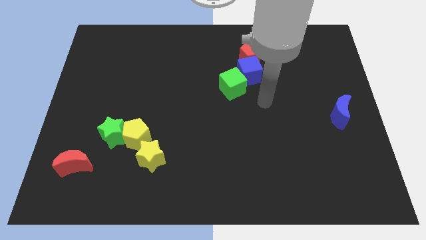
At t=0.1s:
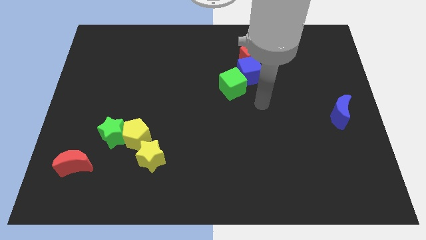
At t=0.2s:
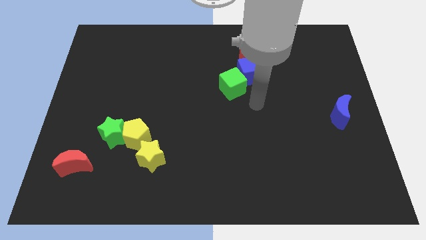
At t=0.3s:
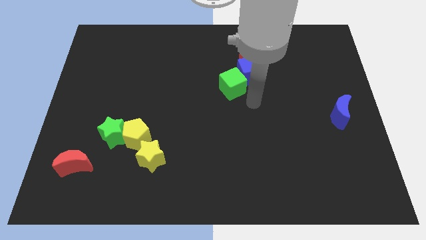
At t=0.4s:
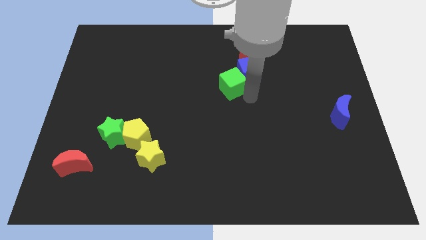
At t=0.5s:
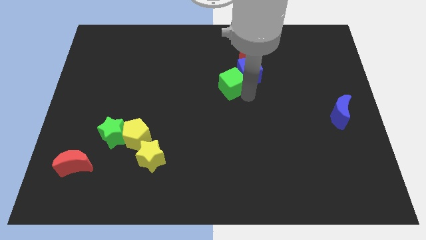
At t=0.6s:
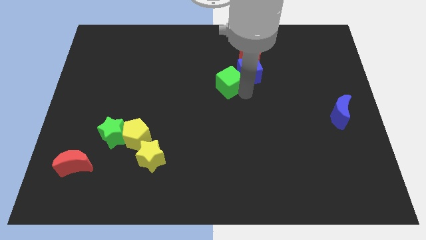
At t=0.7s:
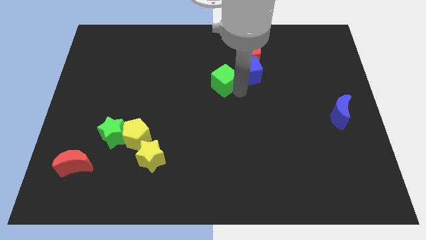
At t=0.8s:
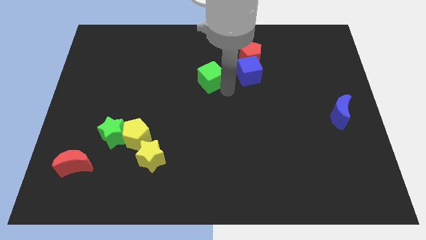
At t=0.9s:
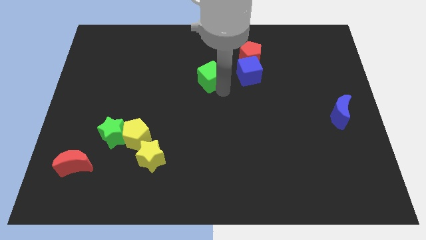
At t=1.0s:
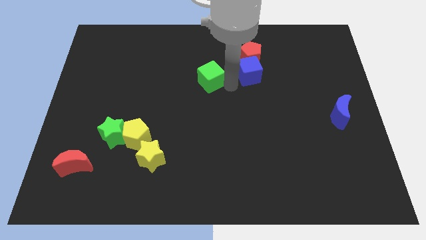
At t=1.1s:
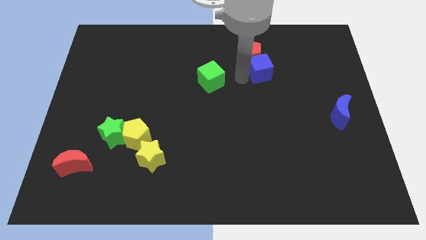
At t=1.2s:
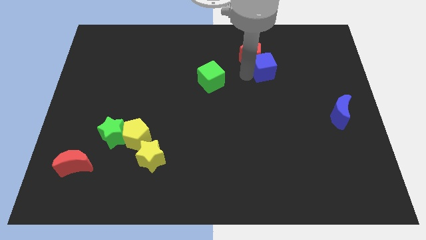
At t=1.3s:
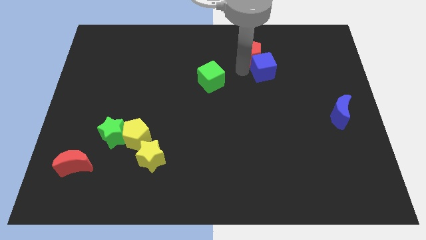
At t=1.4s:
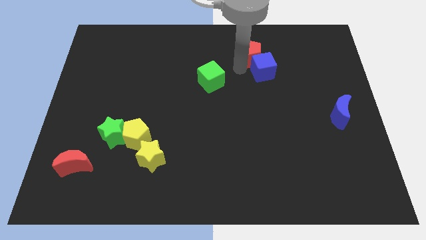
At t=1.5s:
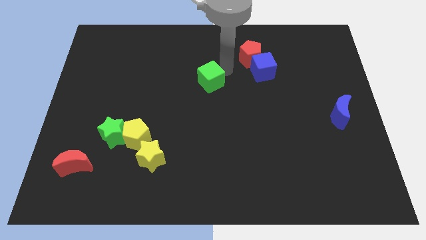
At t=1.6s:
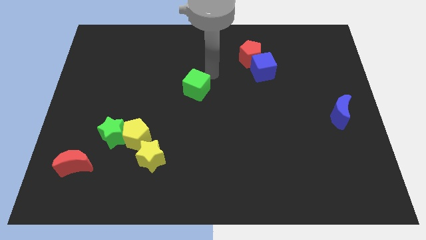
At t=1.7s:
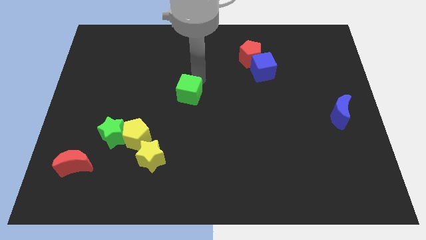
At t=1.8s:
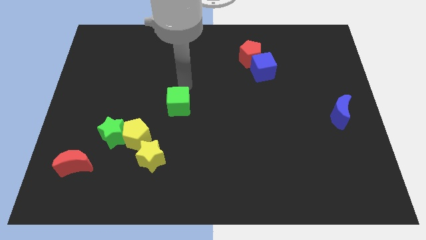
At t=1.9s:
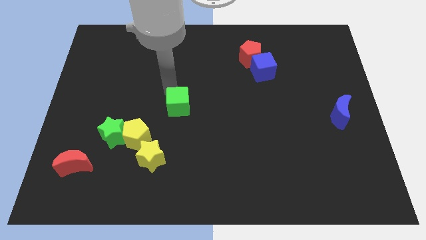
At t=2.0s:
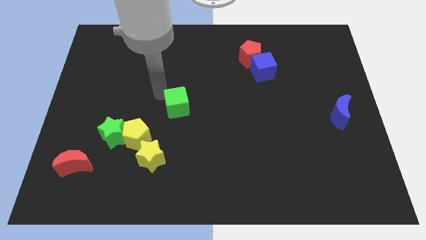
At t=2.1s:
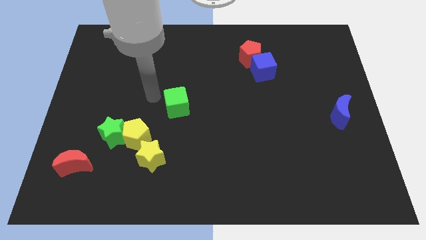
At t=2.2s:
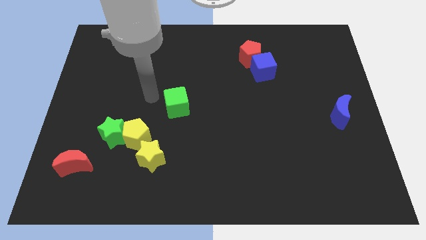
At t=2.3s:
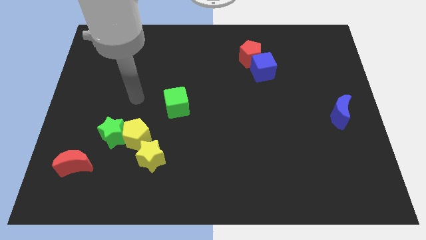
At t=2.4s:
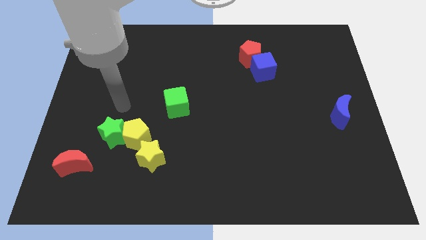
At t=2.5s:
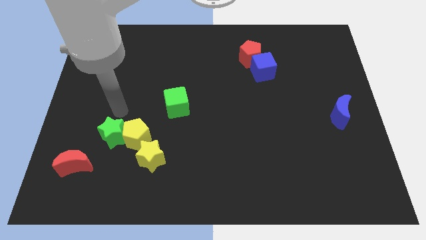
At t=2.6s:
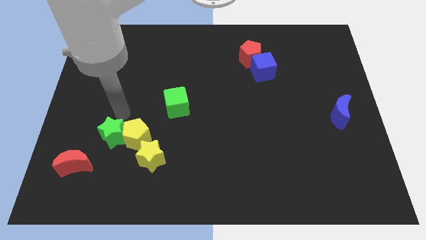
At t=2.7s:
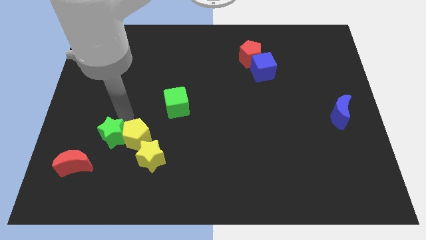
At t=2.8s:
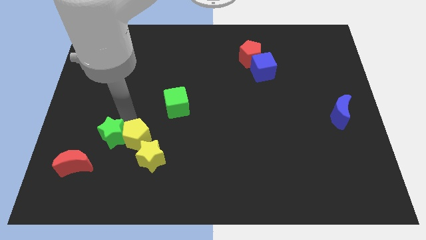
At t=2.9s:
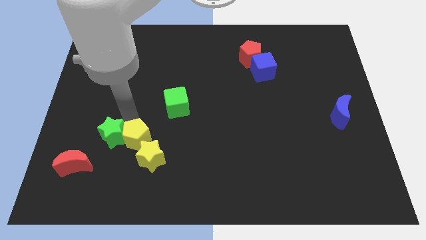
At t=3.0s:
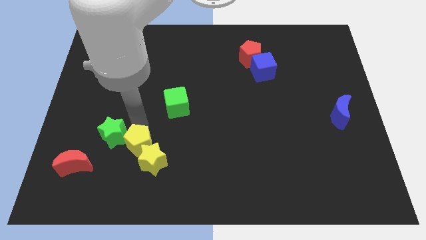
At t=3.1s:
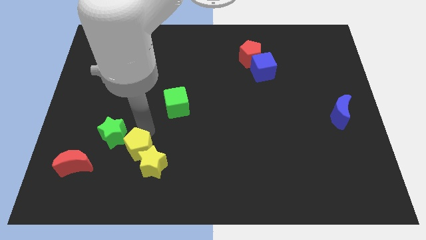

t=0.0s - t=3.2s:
move yellow blocks slightly down

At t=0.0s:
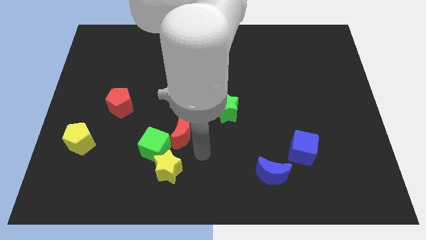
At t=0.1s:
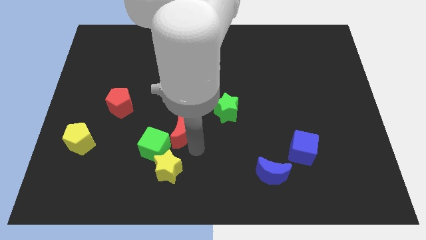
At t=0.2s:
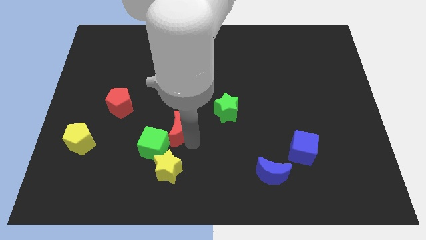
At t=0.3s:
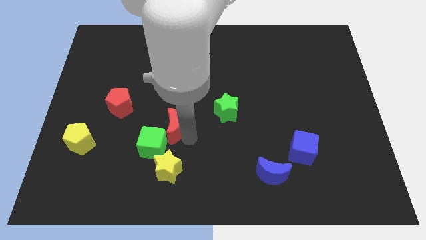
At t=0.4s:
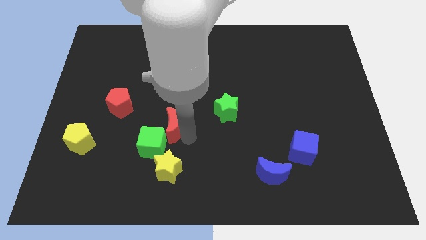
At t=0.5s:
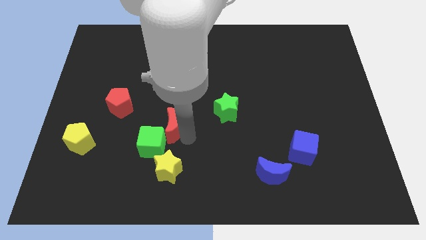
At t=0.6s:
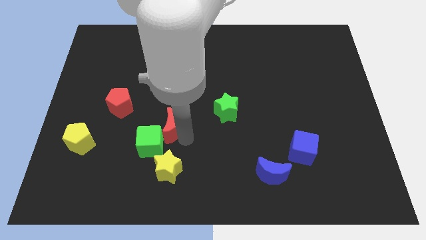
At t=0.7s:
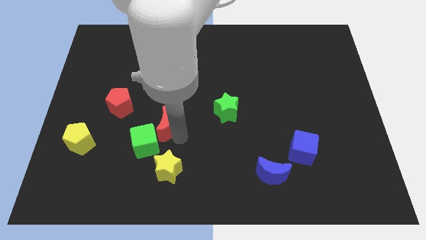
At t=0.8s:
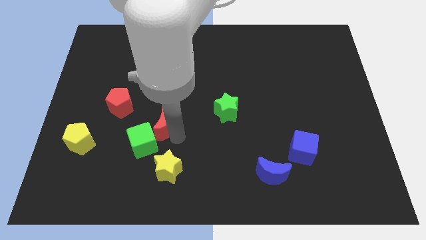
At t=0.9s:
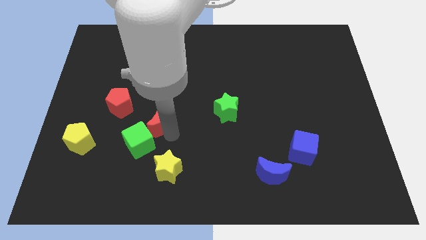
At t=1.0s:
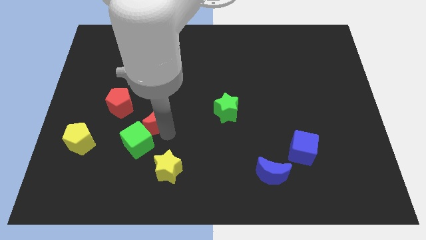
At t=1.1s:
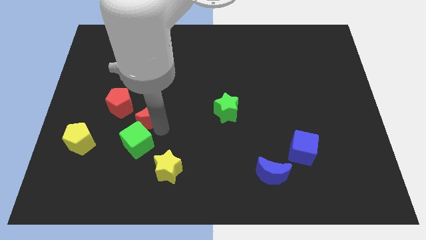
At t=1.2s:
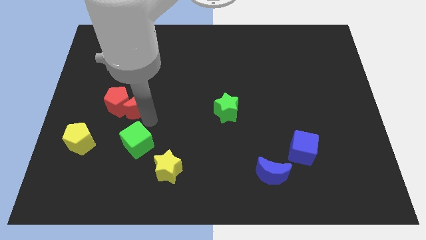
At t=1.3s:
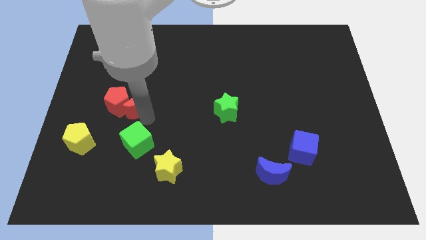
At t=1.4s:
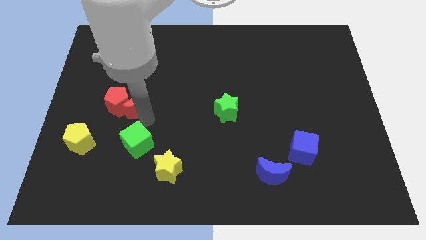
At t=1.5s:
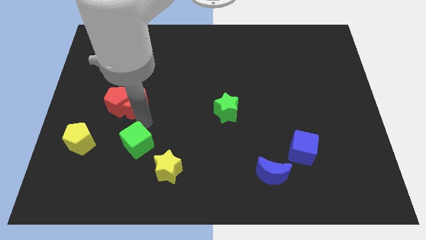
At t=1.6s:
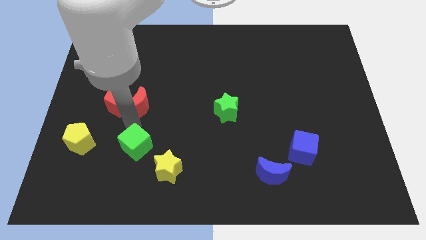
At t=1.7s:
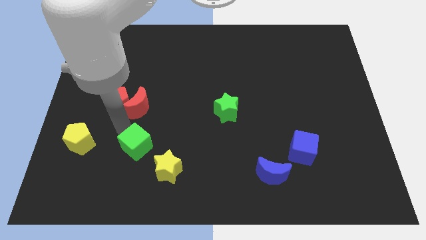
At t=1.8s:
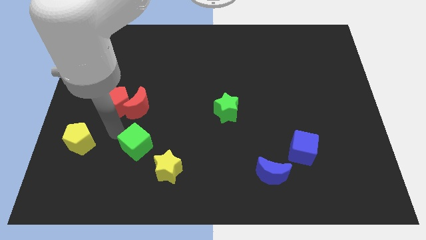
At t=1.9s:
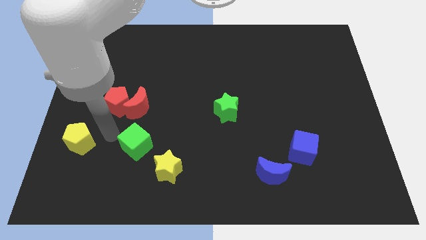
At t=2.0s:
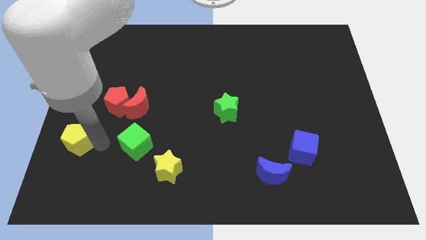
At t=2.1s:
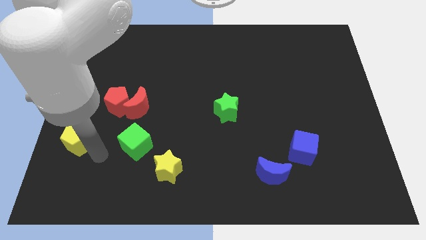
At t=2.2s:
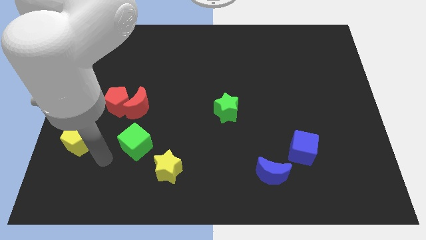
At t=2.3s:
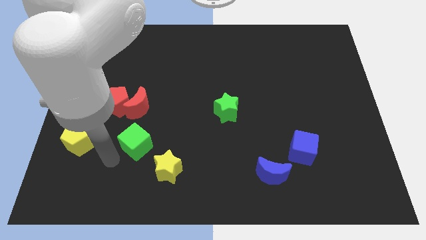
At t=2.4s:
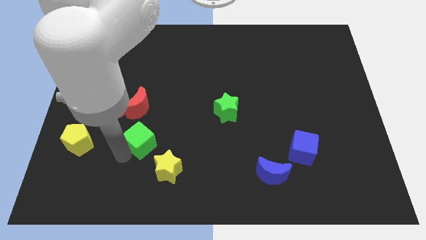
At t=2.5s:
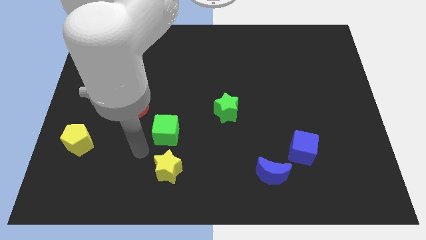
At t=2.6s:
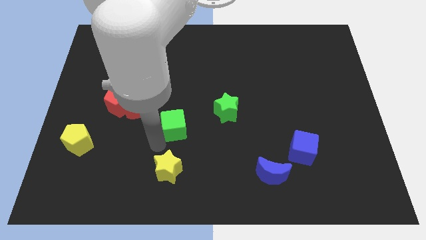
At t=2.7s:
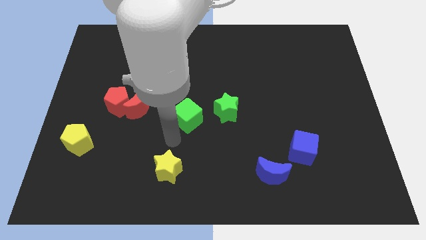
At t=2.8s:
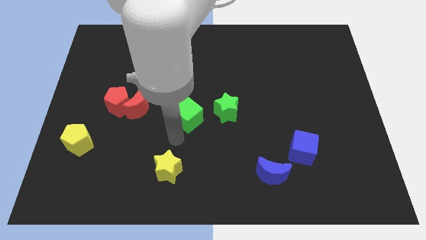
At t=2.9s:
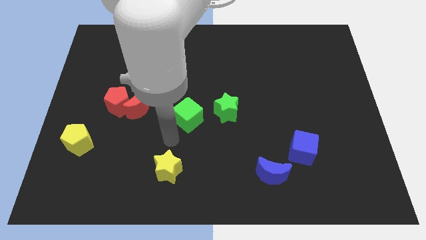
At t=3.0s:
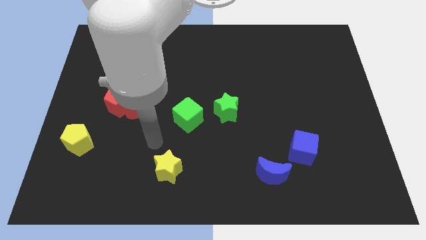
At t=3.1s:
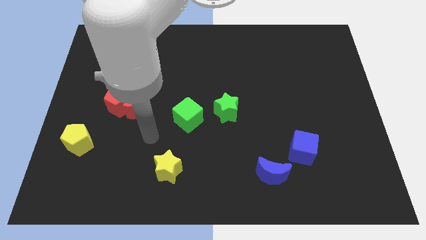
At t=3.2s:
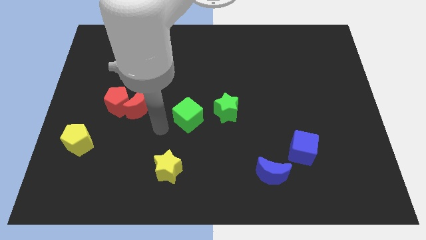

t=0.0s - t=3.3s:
push the green cube towards the center

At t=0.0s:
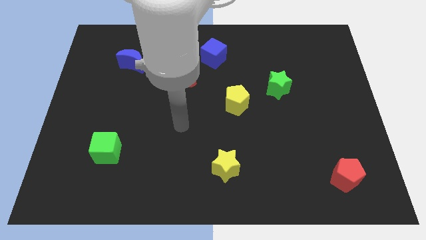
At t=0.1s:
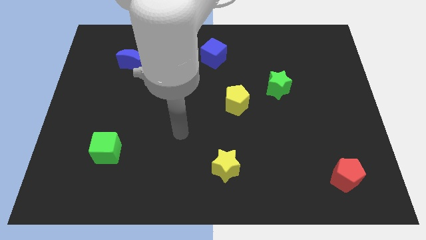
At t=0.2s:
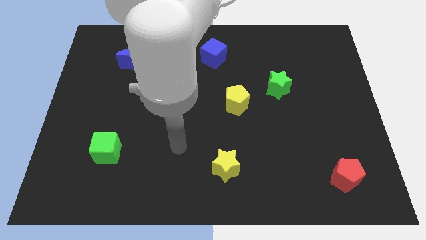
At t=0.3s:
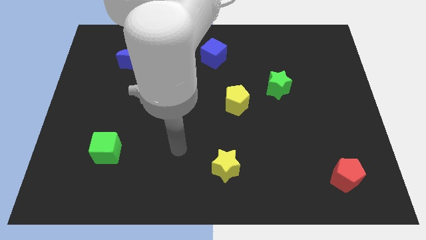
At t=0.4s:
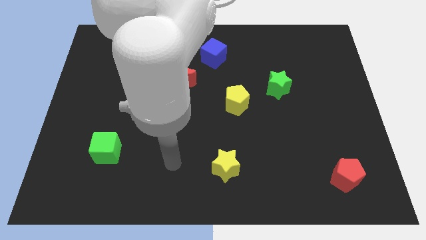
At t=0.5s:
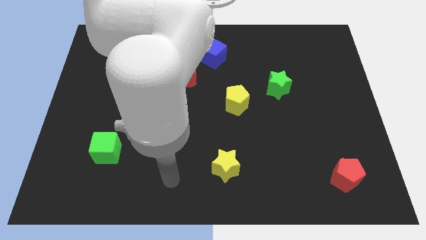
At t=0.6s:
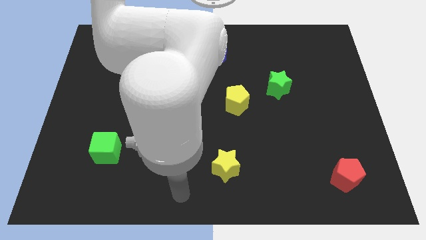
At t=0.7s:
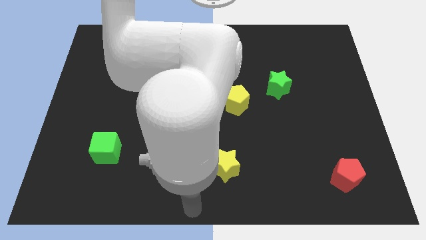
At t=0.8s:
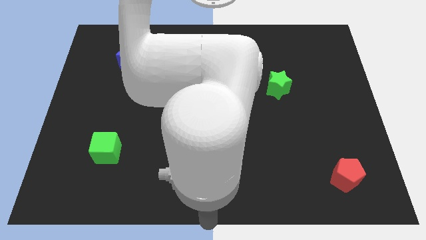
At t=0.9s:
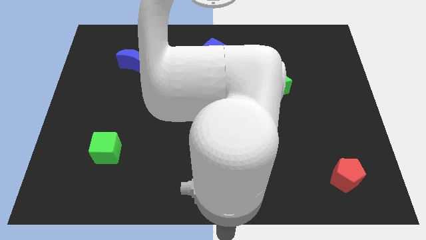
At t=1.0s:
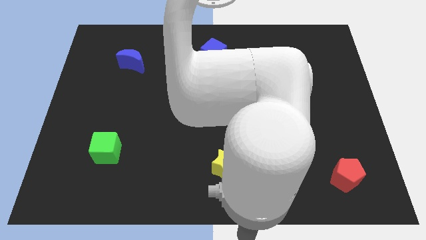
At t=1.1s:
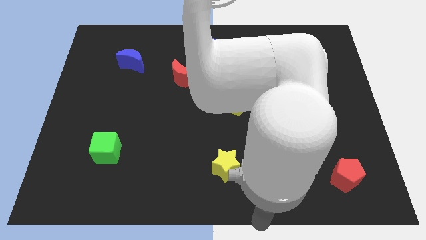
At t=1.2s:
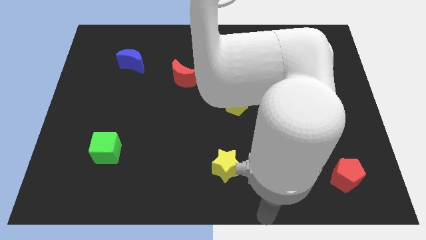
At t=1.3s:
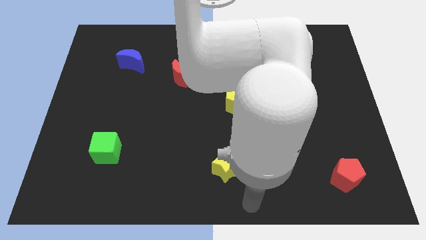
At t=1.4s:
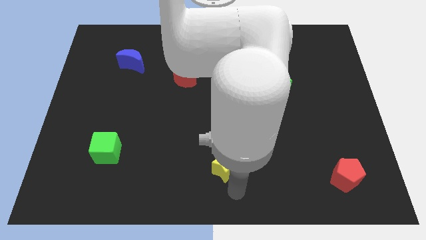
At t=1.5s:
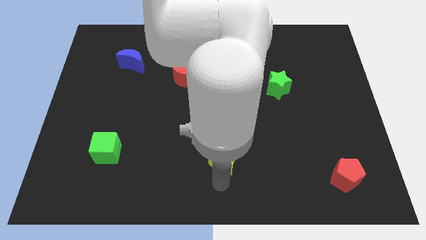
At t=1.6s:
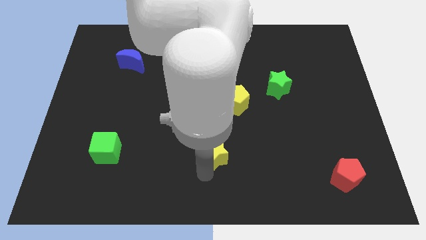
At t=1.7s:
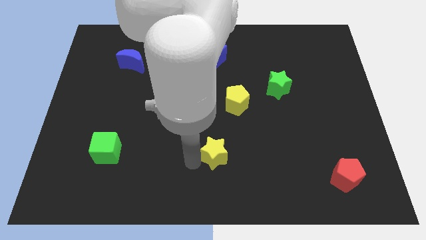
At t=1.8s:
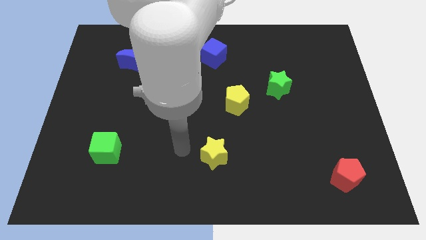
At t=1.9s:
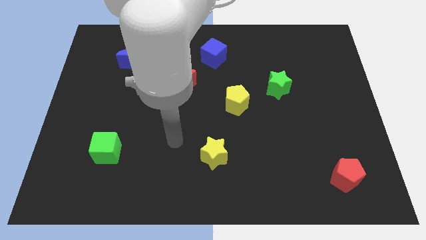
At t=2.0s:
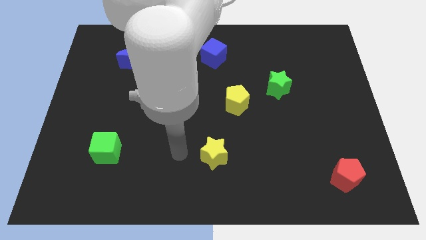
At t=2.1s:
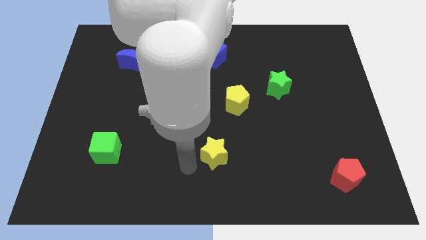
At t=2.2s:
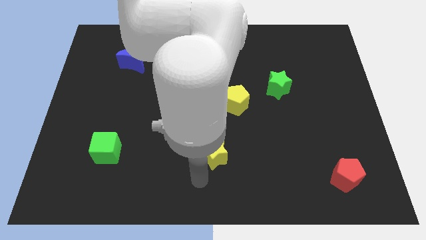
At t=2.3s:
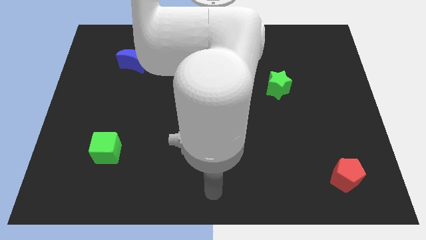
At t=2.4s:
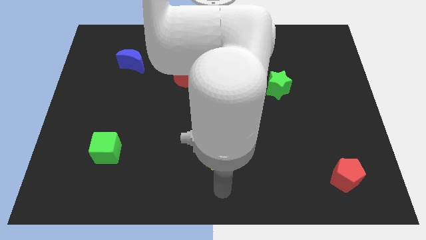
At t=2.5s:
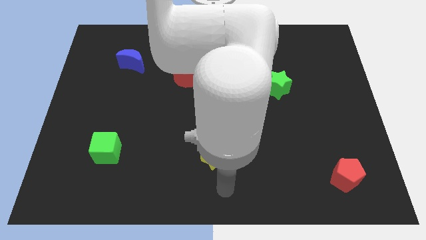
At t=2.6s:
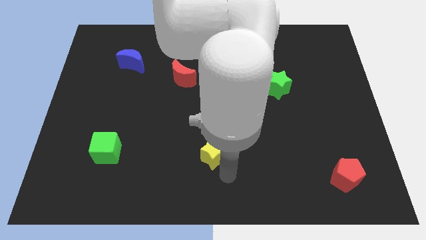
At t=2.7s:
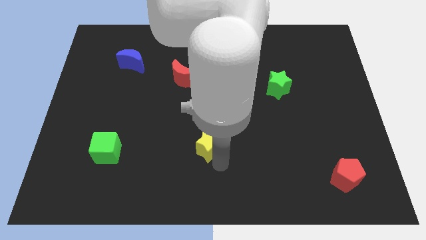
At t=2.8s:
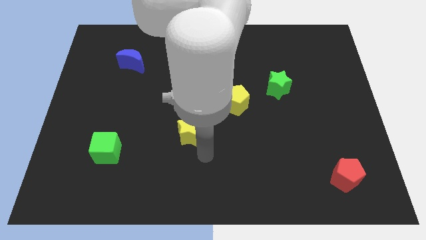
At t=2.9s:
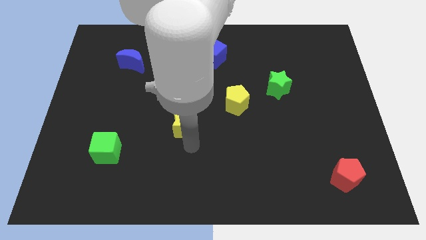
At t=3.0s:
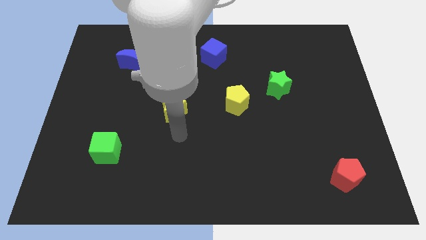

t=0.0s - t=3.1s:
move the yellow star diagonally to the left of the yellow pentagon
